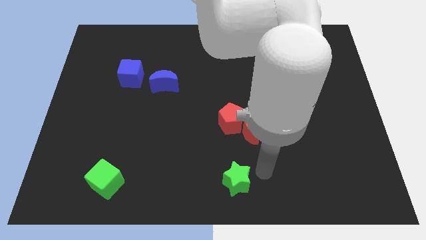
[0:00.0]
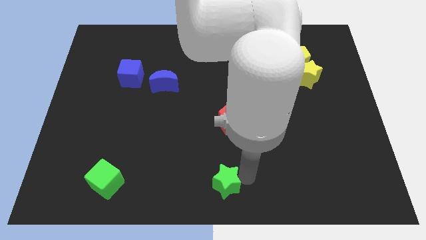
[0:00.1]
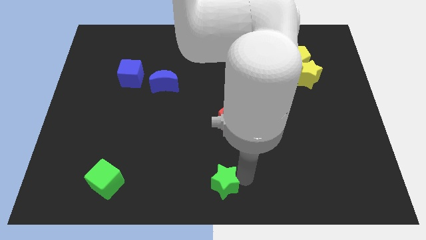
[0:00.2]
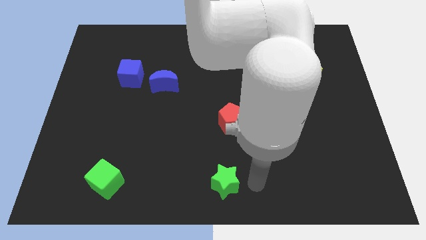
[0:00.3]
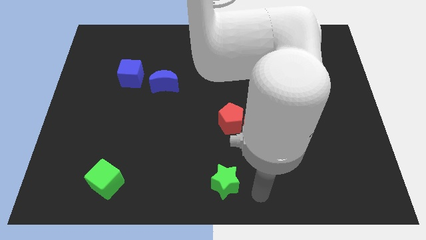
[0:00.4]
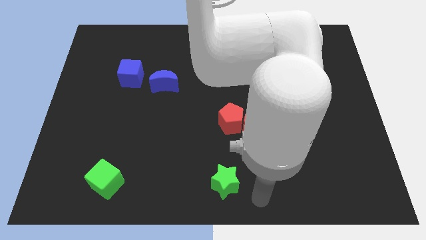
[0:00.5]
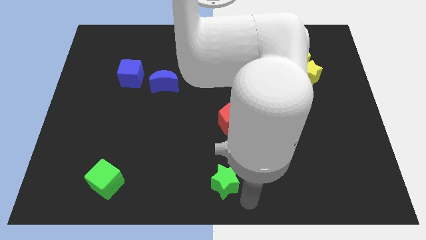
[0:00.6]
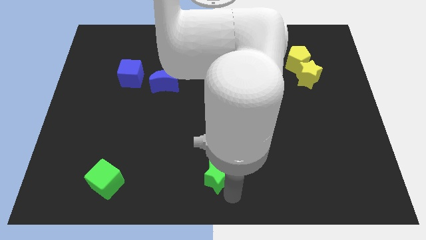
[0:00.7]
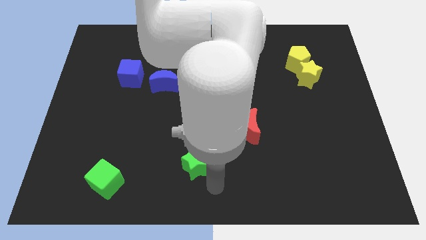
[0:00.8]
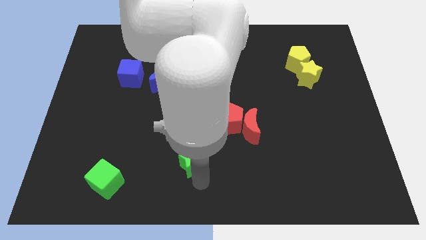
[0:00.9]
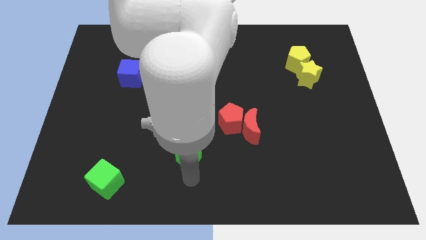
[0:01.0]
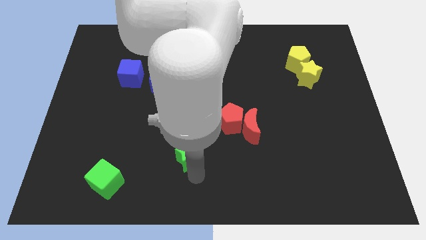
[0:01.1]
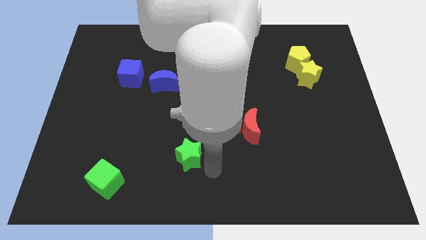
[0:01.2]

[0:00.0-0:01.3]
move the green star to the bottom left of the red pentagon

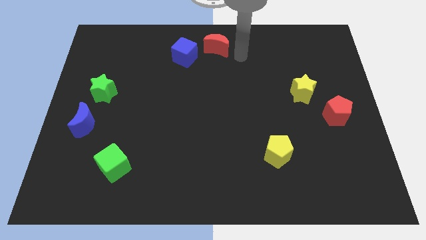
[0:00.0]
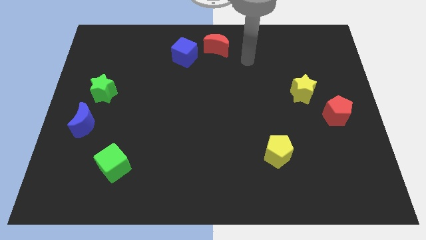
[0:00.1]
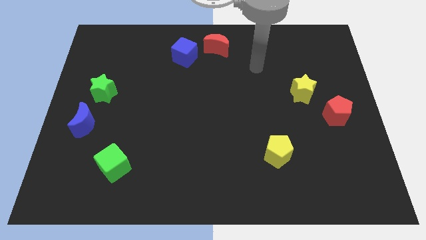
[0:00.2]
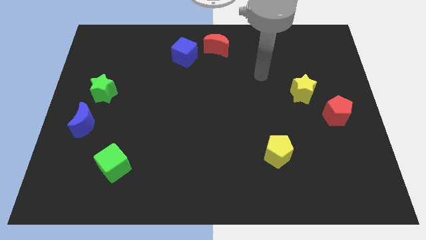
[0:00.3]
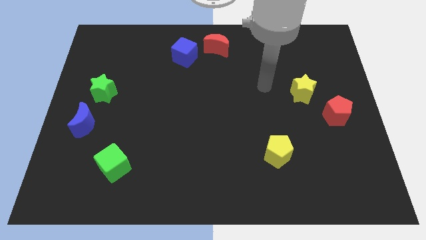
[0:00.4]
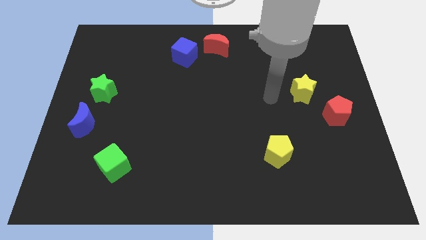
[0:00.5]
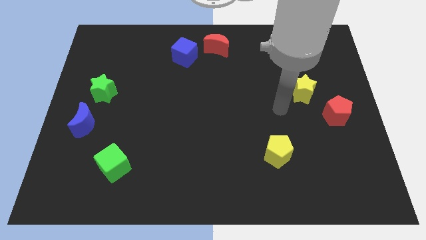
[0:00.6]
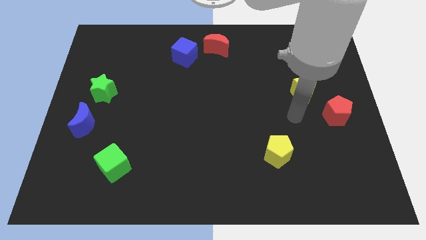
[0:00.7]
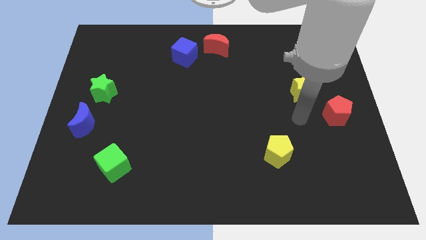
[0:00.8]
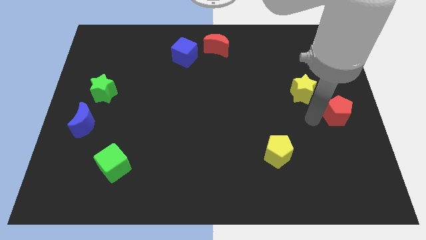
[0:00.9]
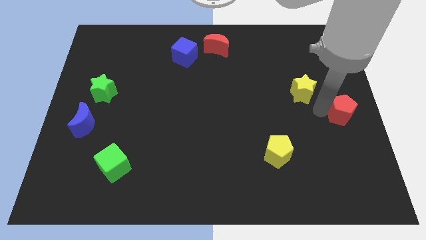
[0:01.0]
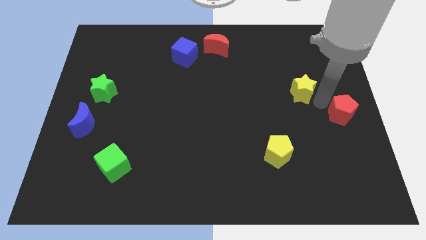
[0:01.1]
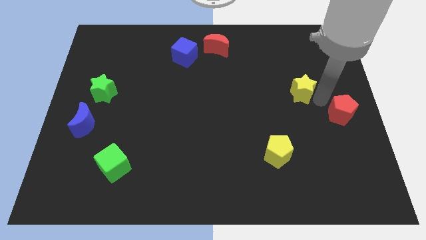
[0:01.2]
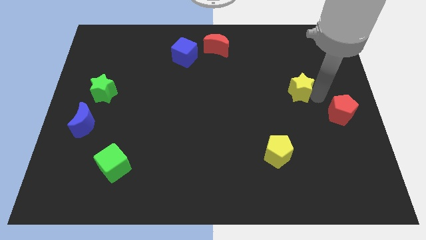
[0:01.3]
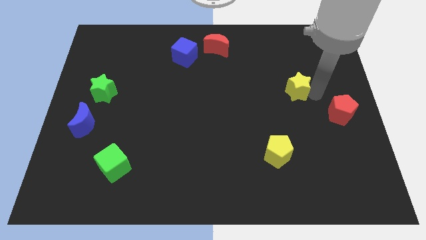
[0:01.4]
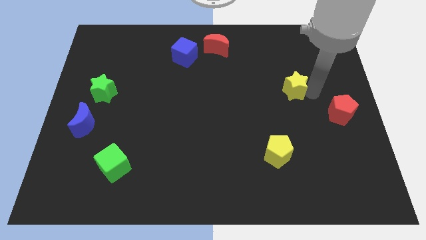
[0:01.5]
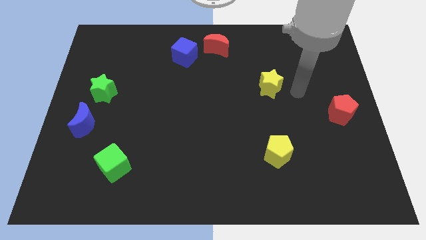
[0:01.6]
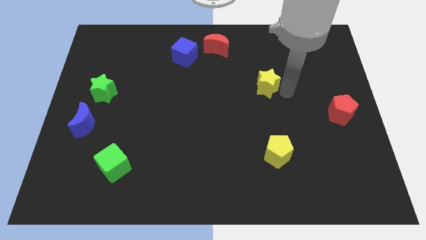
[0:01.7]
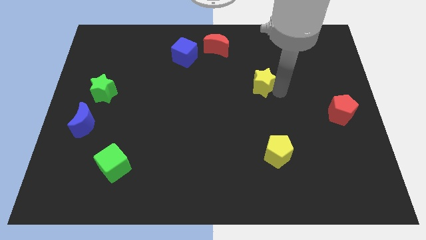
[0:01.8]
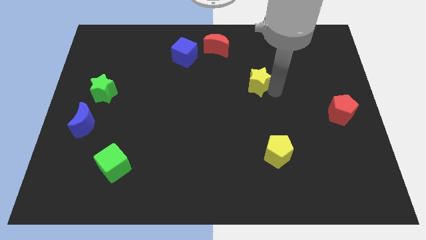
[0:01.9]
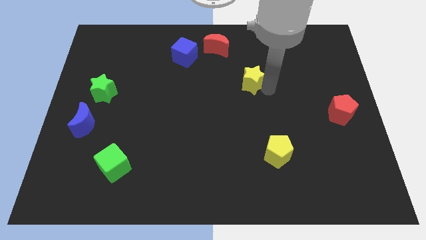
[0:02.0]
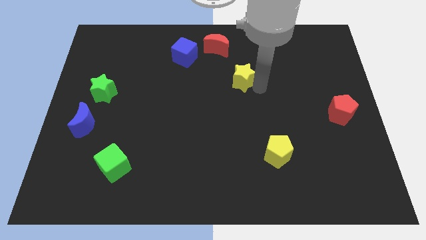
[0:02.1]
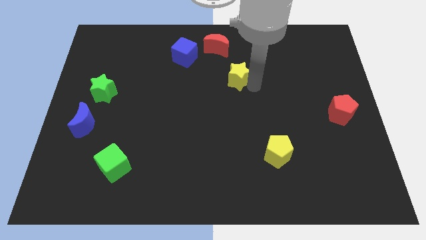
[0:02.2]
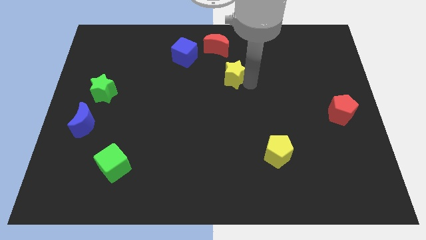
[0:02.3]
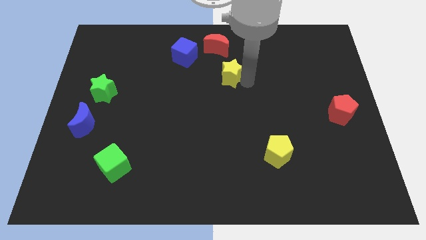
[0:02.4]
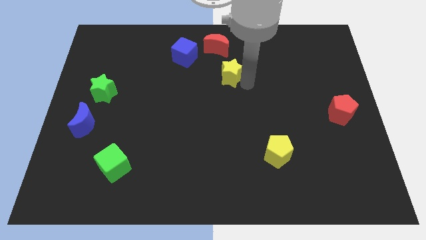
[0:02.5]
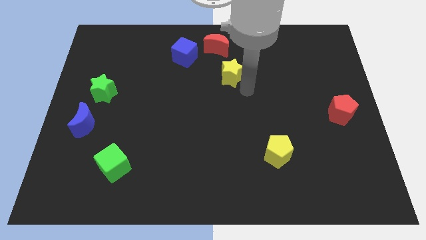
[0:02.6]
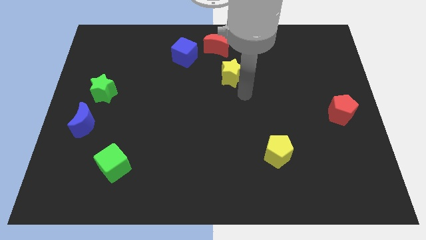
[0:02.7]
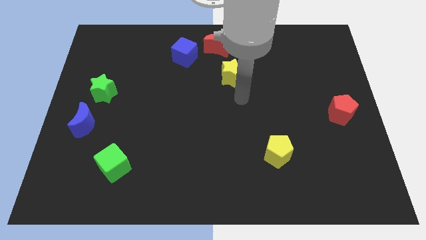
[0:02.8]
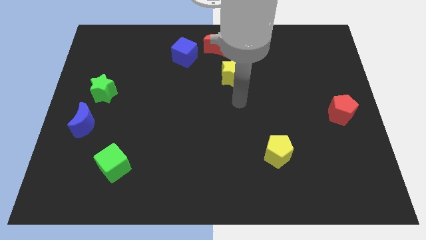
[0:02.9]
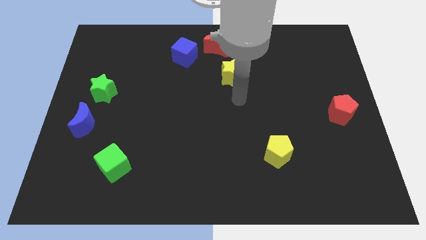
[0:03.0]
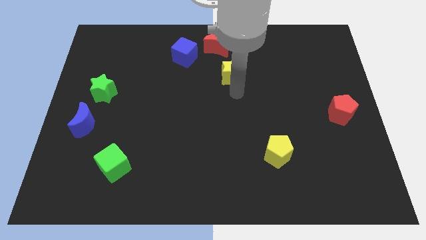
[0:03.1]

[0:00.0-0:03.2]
move the yellow star away from the red pentagon

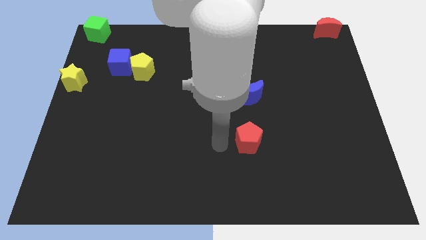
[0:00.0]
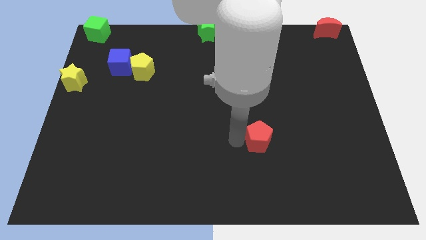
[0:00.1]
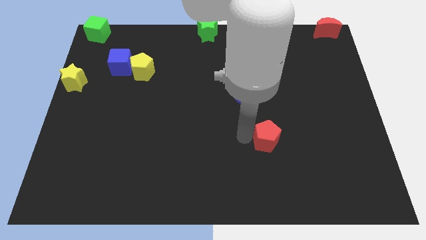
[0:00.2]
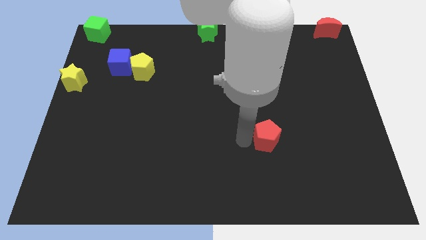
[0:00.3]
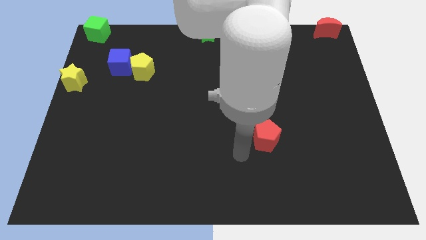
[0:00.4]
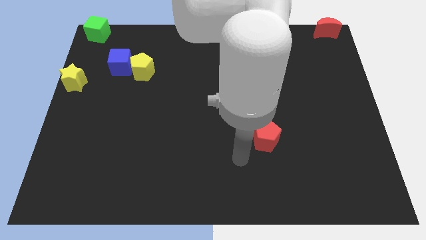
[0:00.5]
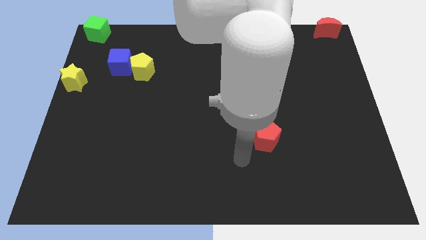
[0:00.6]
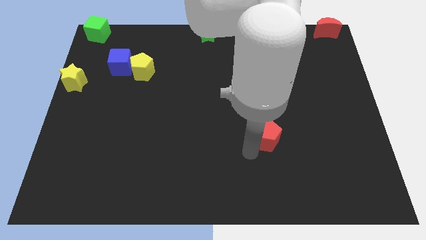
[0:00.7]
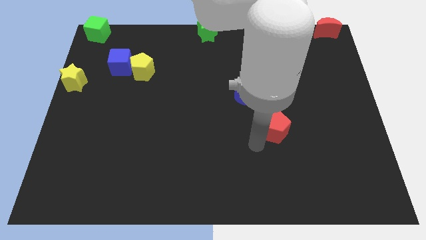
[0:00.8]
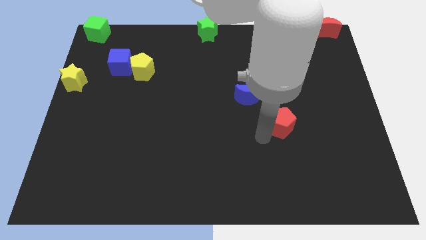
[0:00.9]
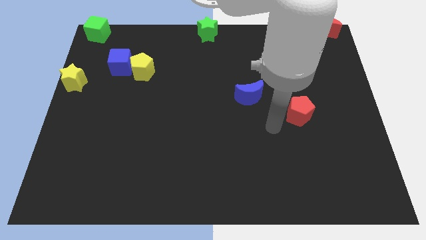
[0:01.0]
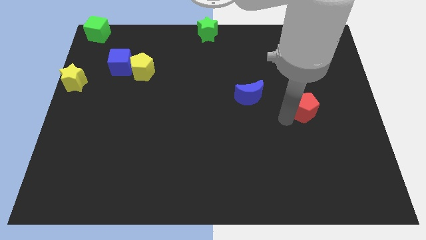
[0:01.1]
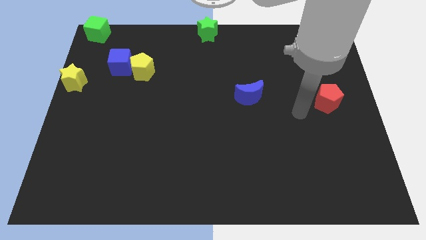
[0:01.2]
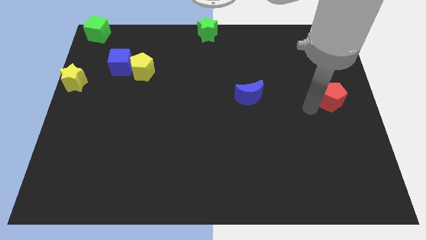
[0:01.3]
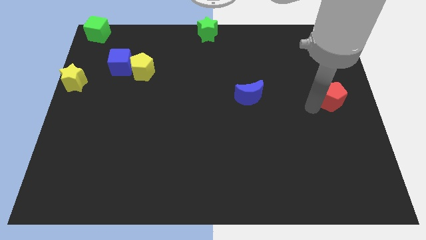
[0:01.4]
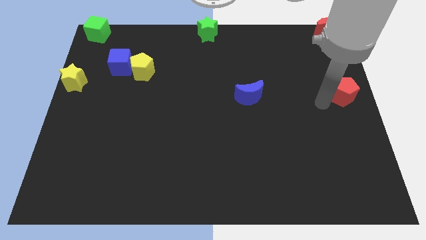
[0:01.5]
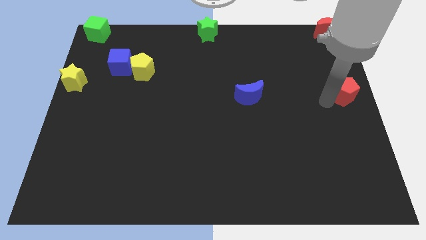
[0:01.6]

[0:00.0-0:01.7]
push the red pentagon to the center right

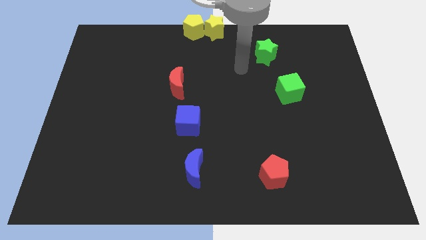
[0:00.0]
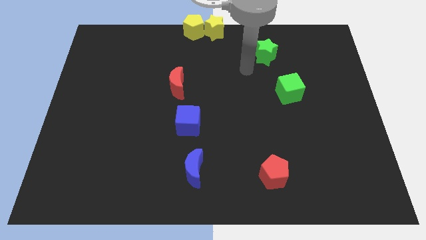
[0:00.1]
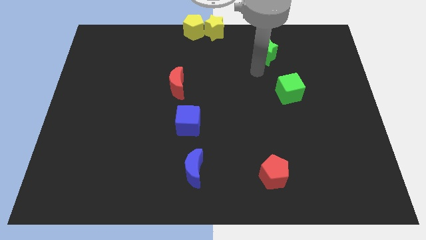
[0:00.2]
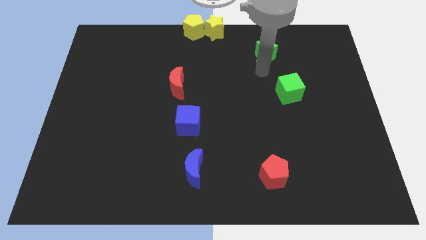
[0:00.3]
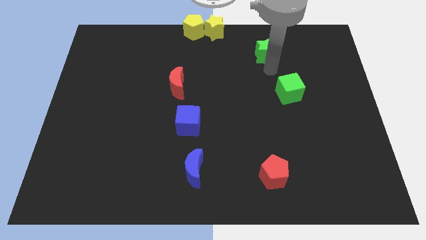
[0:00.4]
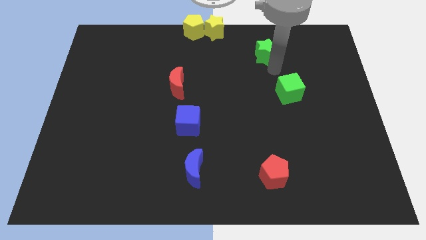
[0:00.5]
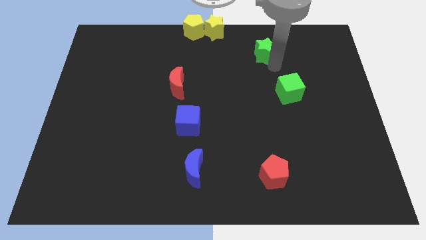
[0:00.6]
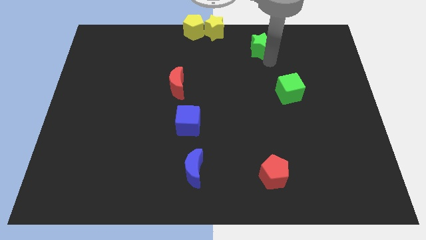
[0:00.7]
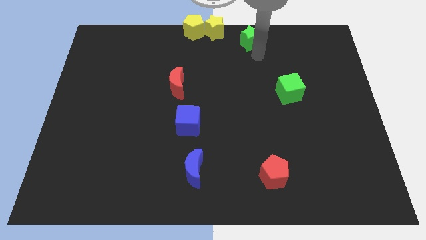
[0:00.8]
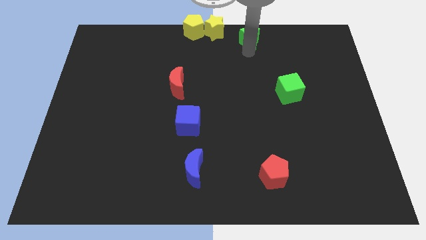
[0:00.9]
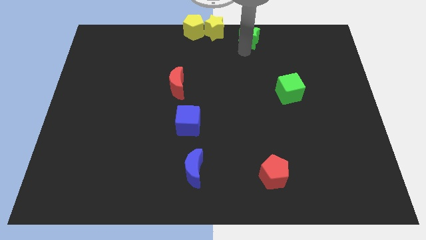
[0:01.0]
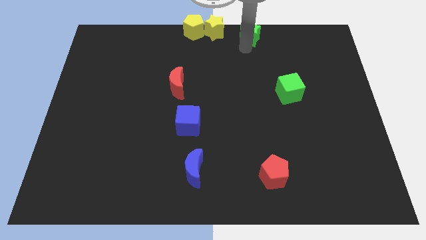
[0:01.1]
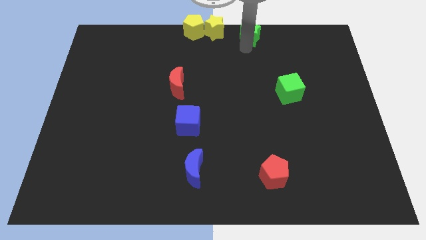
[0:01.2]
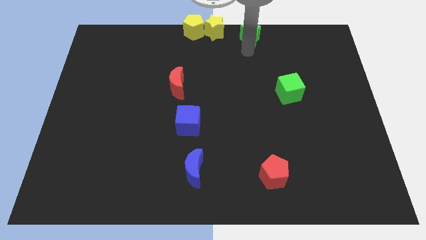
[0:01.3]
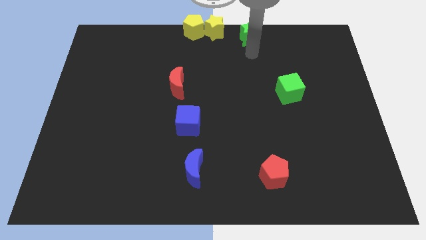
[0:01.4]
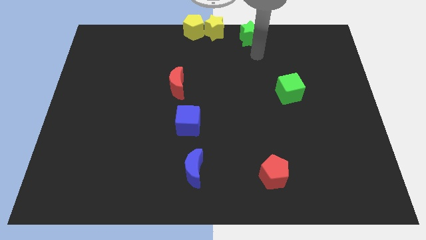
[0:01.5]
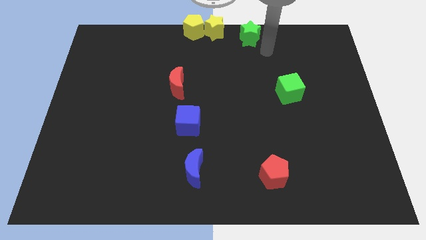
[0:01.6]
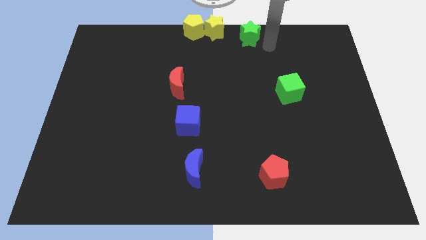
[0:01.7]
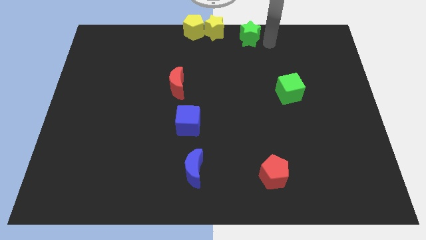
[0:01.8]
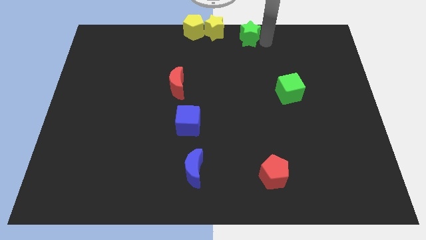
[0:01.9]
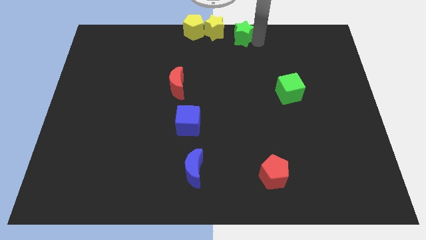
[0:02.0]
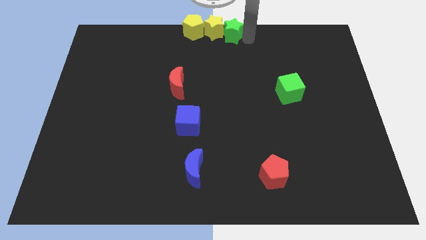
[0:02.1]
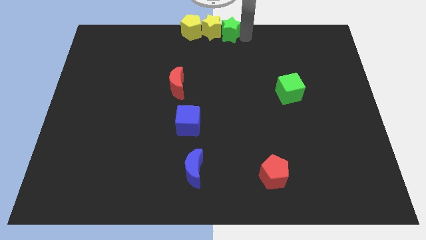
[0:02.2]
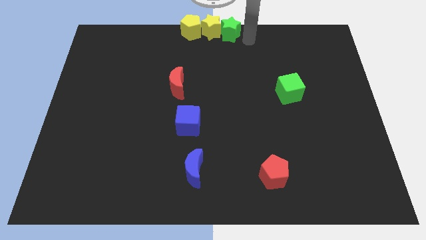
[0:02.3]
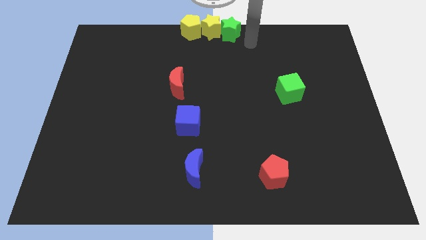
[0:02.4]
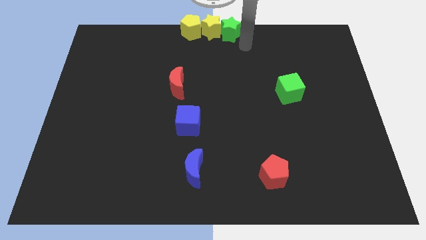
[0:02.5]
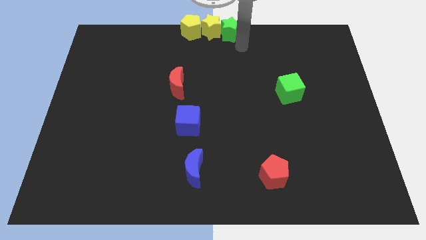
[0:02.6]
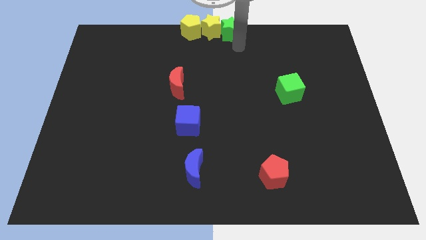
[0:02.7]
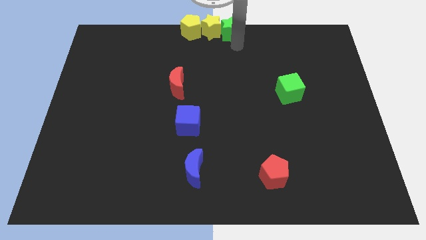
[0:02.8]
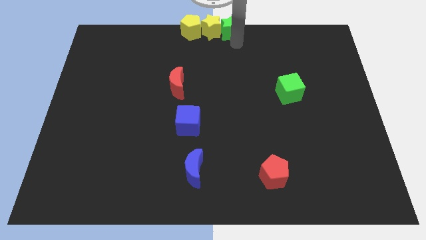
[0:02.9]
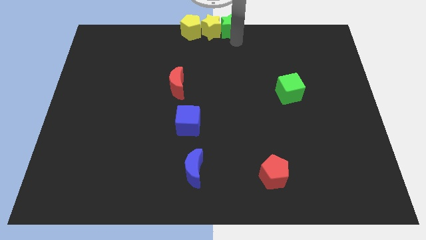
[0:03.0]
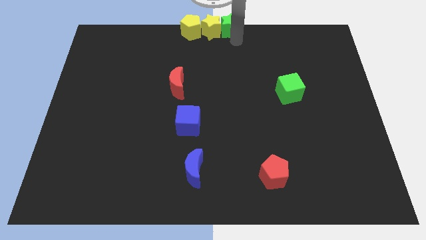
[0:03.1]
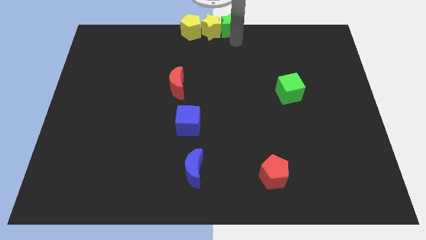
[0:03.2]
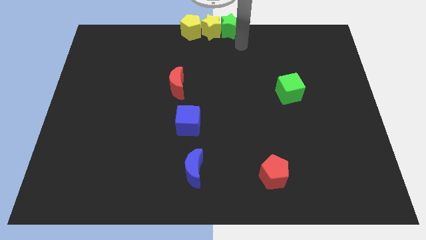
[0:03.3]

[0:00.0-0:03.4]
move the green star right to the yellow star
